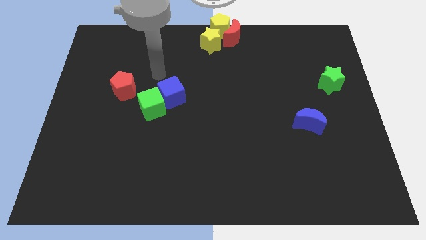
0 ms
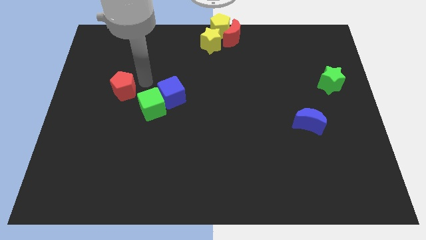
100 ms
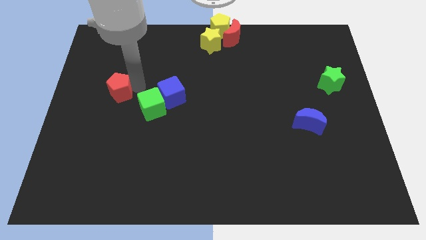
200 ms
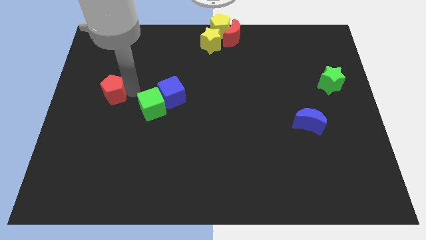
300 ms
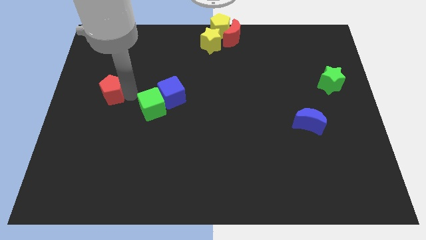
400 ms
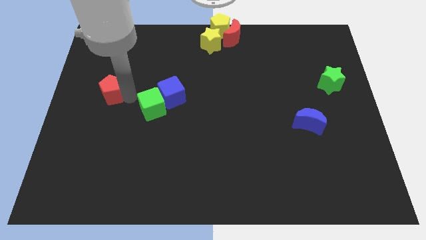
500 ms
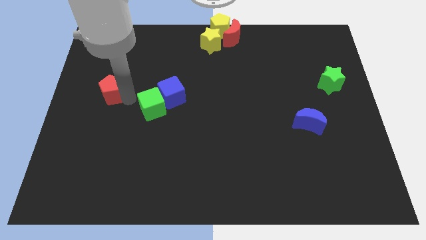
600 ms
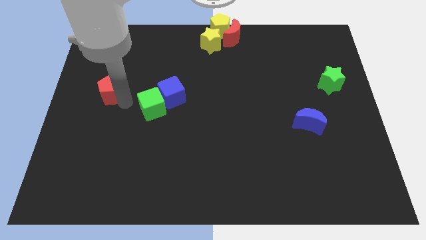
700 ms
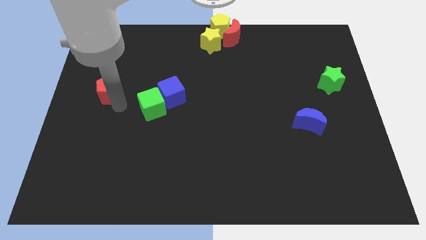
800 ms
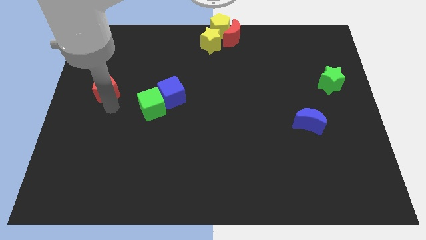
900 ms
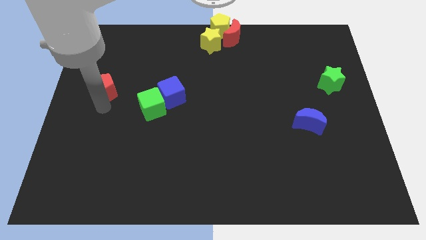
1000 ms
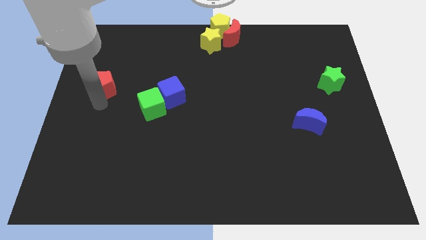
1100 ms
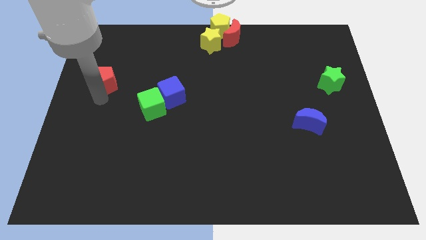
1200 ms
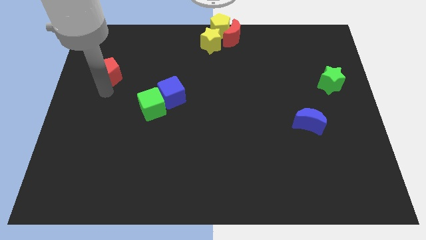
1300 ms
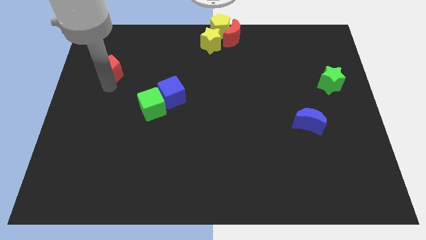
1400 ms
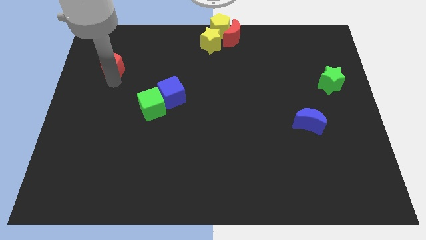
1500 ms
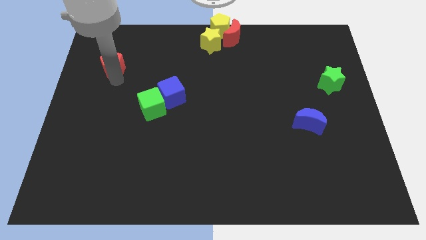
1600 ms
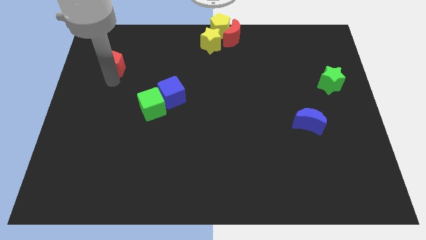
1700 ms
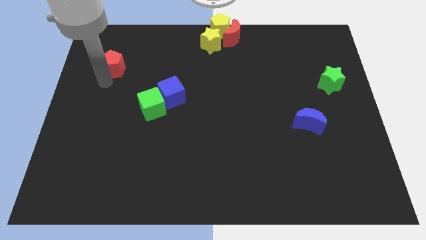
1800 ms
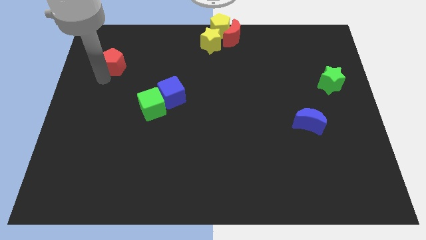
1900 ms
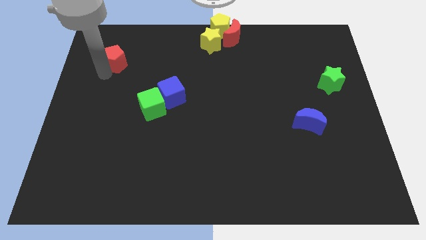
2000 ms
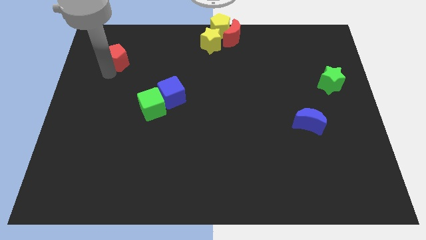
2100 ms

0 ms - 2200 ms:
slide the red pentagon towards up

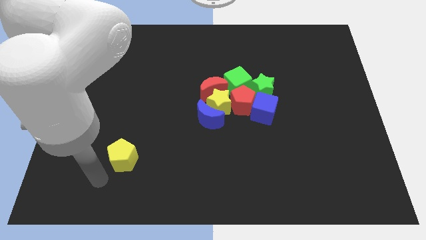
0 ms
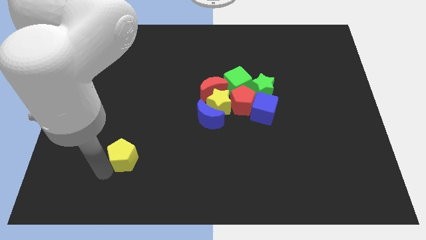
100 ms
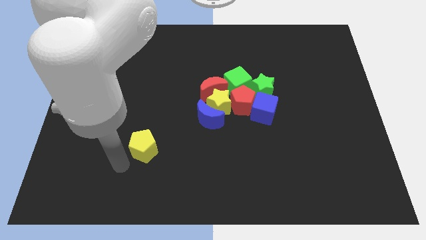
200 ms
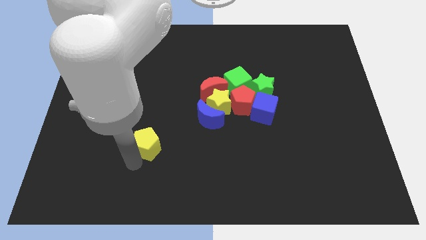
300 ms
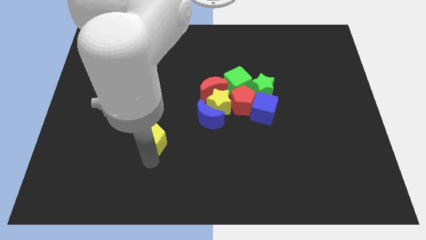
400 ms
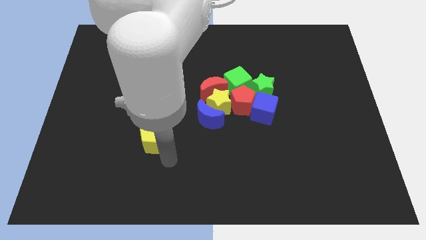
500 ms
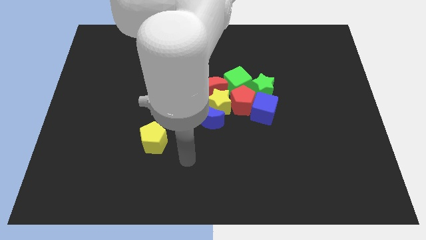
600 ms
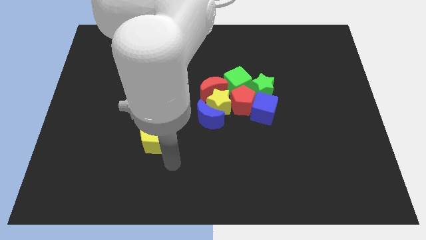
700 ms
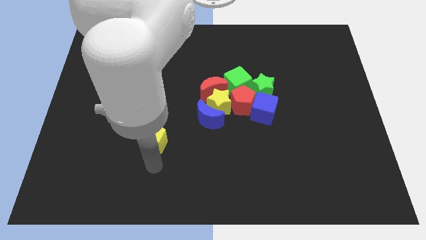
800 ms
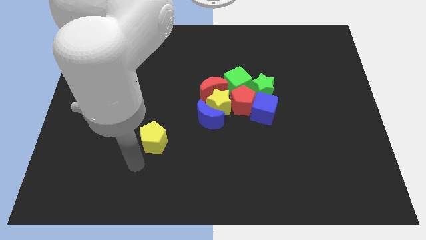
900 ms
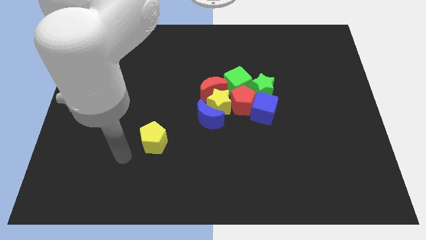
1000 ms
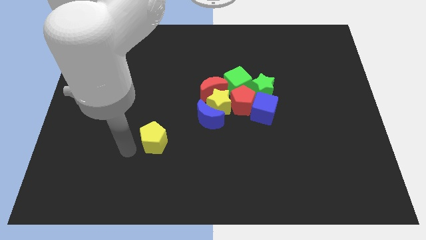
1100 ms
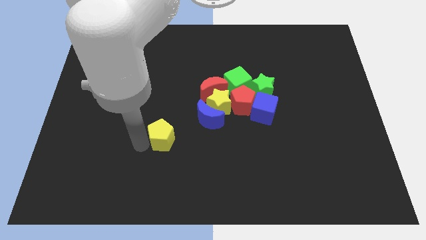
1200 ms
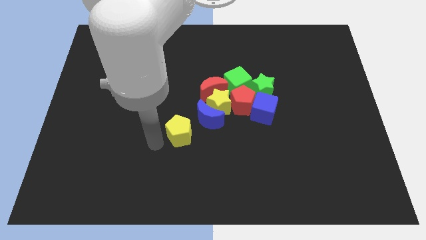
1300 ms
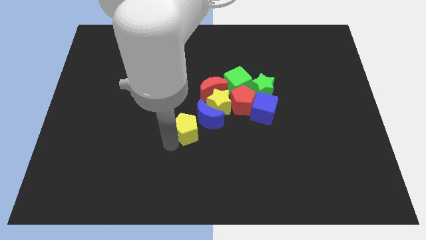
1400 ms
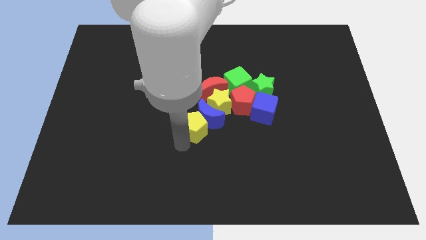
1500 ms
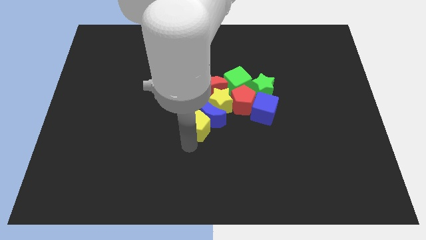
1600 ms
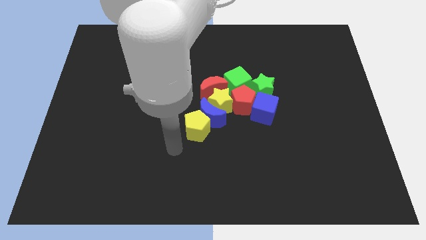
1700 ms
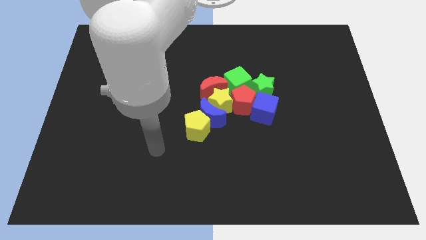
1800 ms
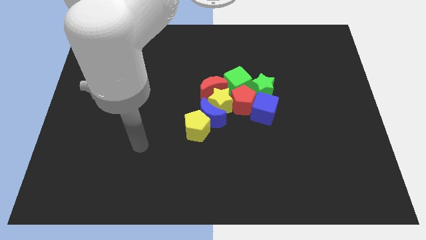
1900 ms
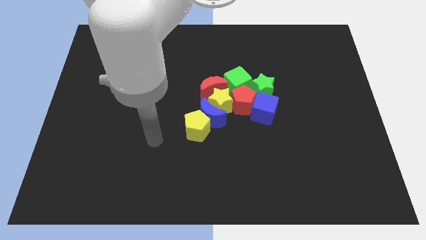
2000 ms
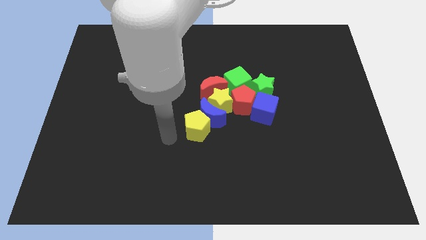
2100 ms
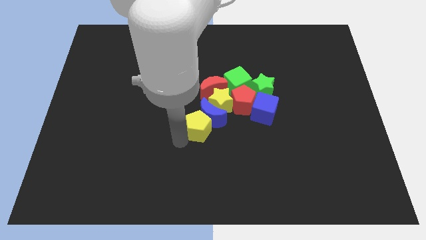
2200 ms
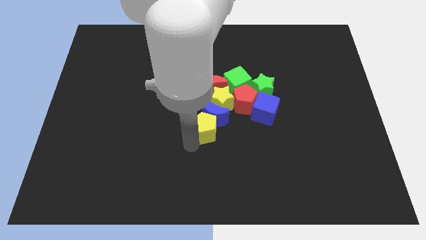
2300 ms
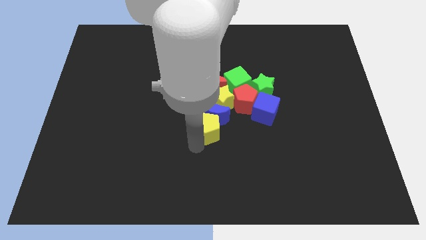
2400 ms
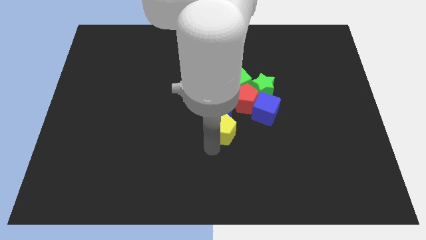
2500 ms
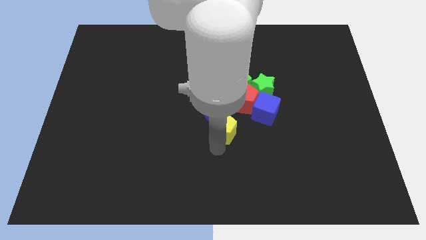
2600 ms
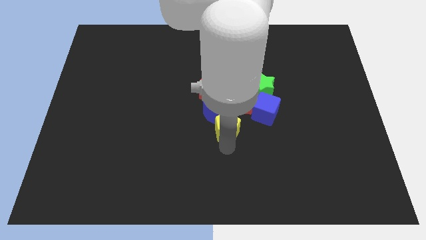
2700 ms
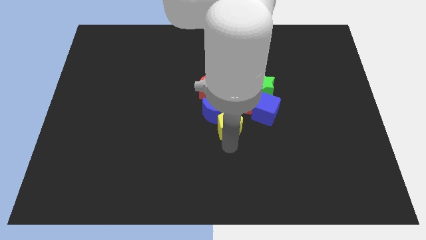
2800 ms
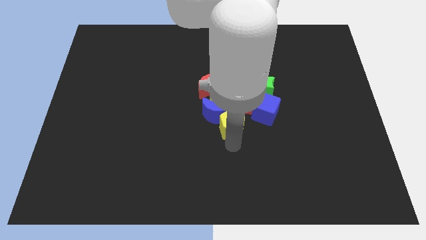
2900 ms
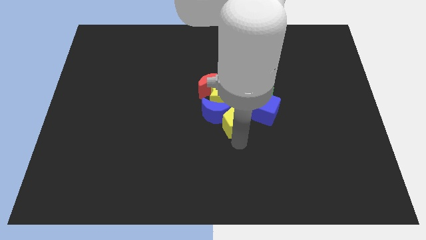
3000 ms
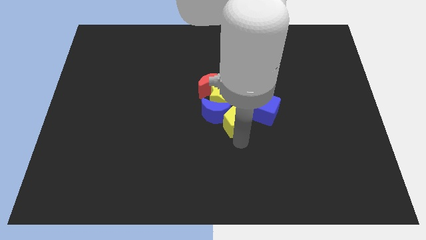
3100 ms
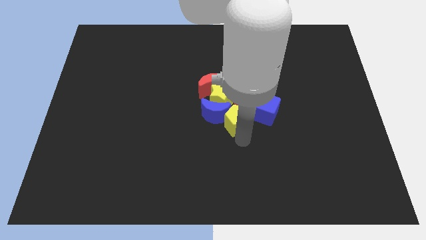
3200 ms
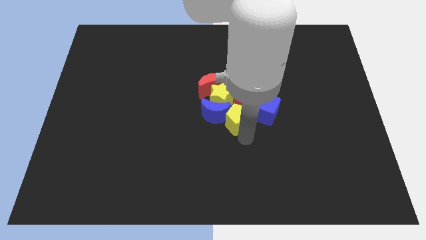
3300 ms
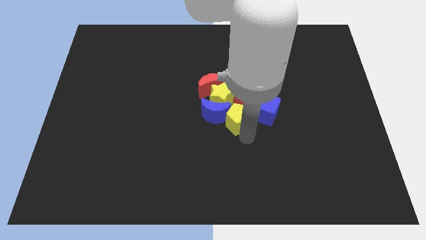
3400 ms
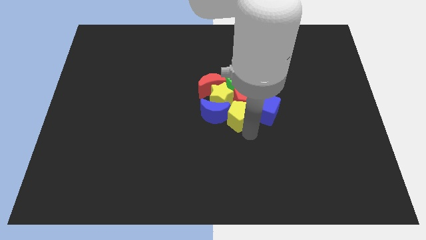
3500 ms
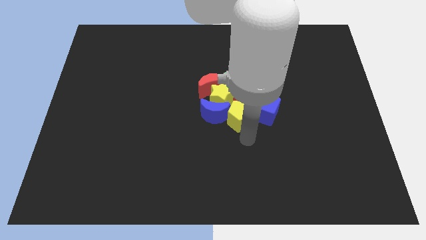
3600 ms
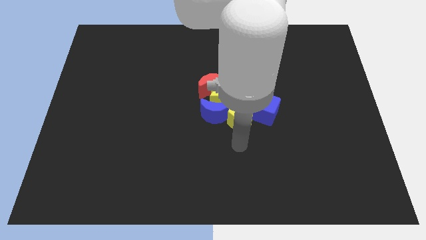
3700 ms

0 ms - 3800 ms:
push the yellow pentagon into the group of blocks

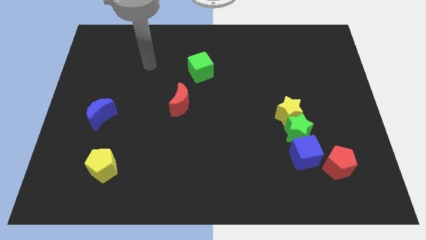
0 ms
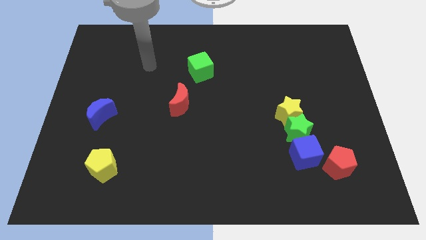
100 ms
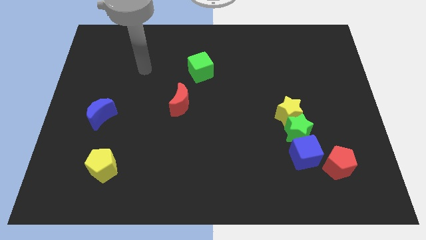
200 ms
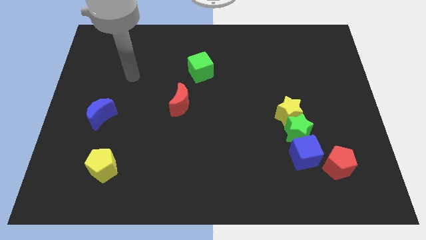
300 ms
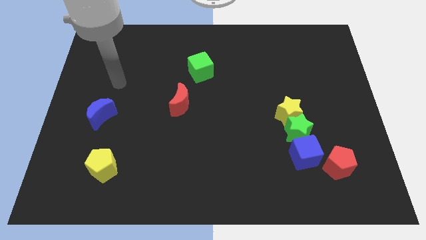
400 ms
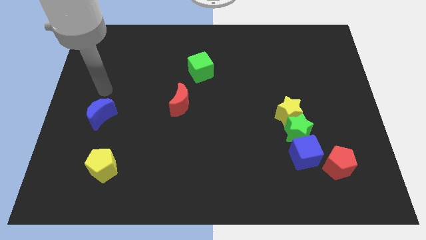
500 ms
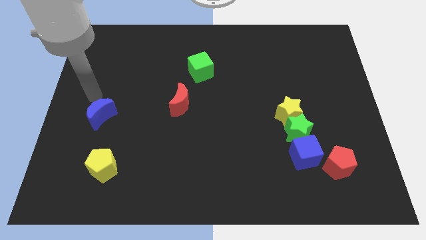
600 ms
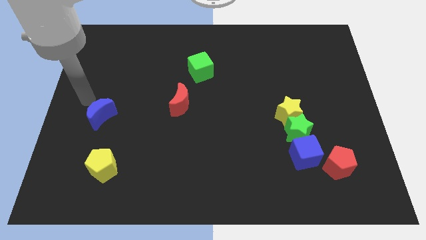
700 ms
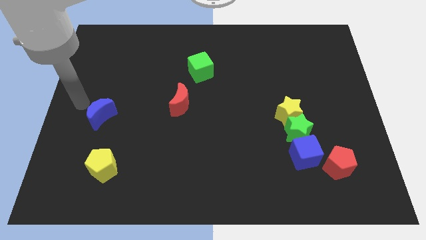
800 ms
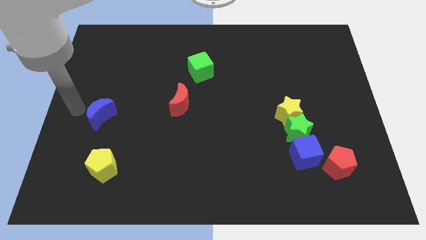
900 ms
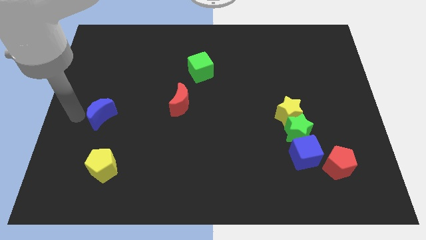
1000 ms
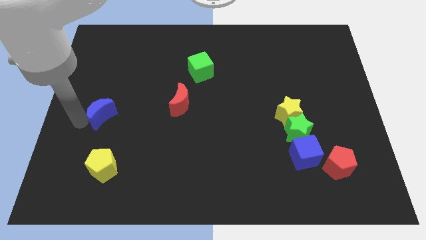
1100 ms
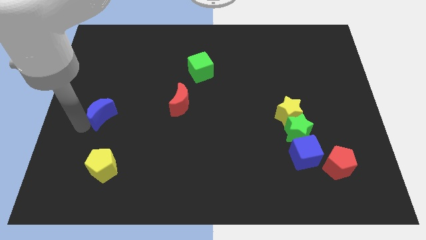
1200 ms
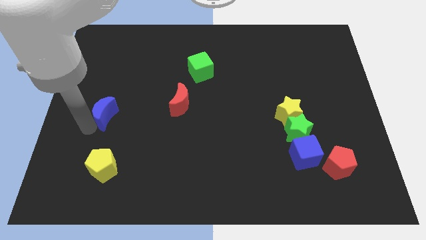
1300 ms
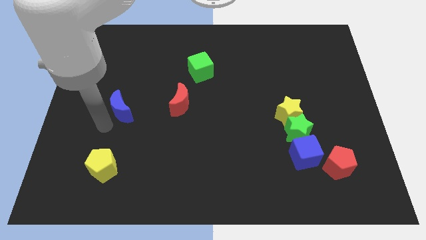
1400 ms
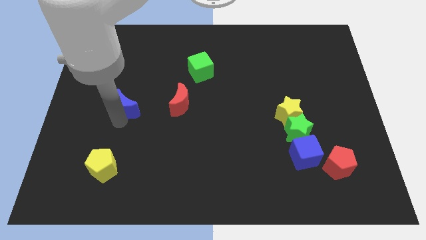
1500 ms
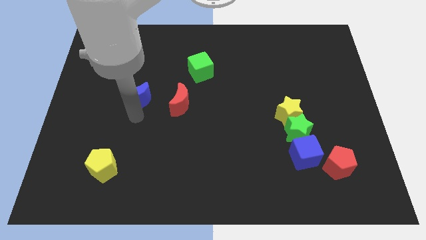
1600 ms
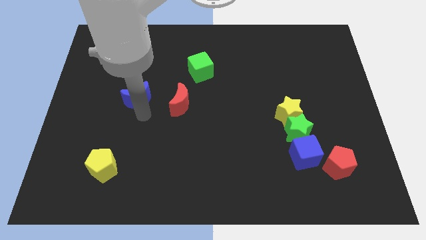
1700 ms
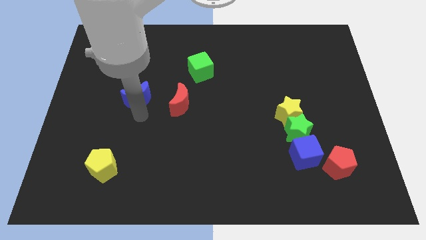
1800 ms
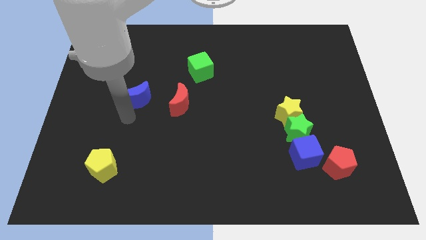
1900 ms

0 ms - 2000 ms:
slide the blue moon parallel left to the red moon

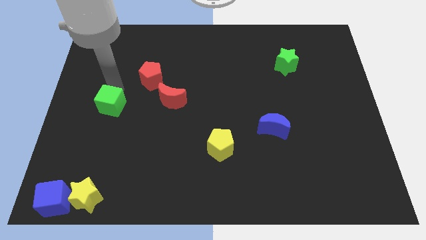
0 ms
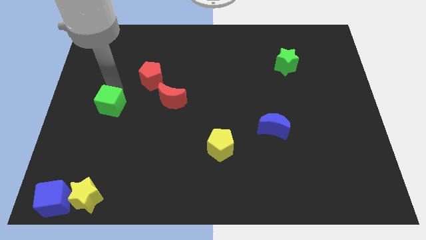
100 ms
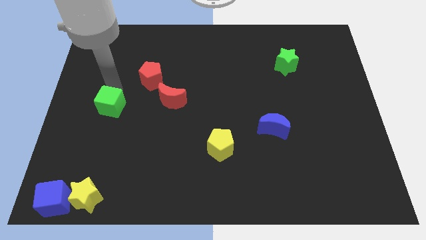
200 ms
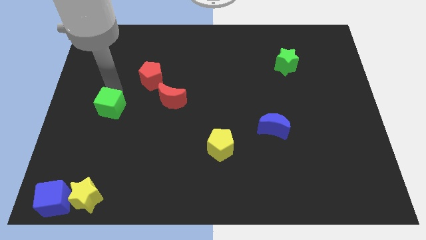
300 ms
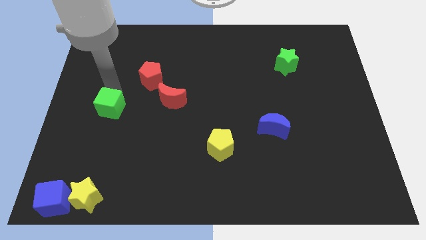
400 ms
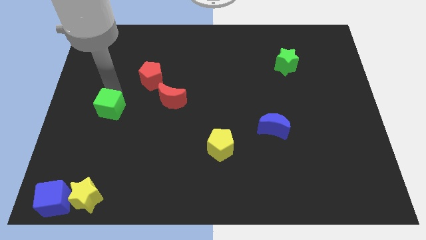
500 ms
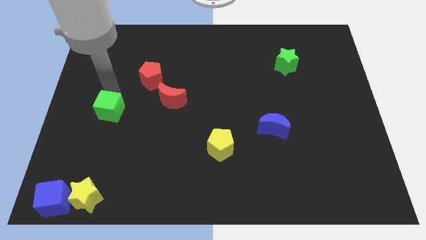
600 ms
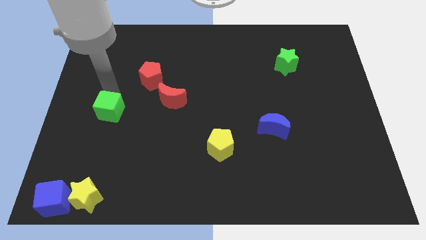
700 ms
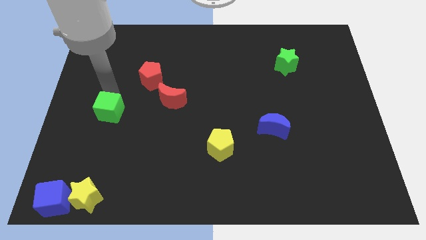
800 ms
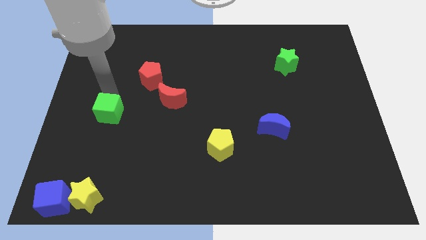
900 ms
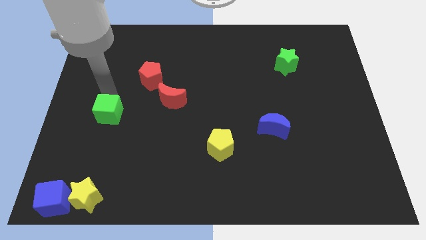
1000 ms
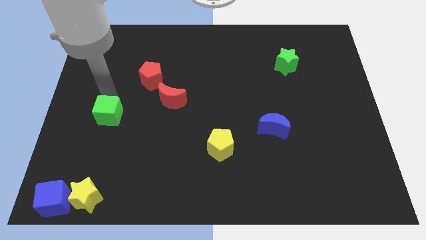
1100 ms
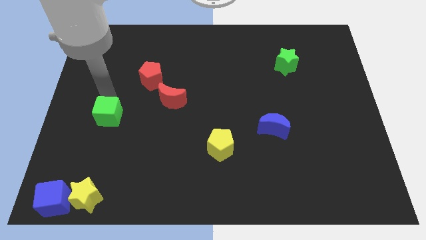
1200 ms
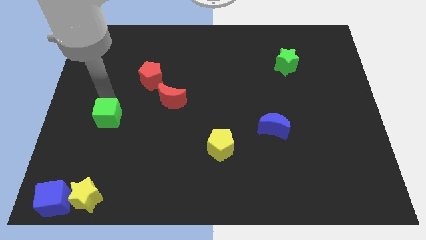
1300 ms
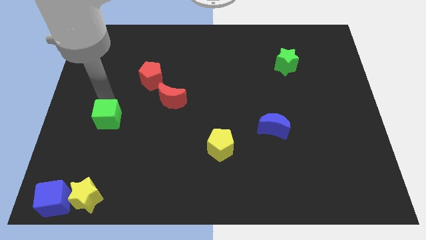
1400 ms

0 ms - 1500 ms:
push the green cube slightly to the bottom of the board
